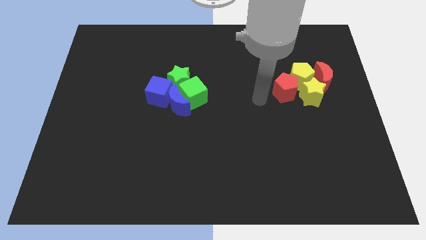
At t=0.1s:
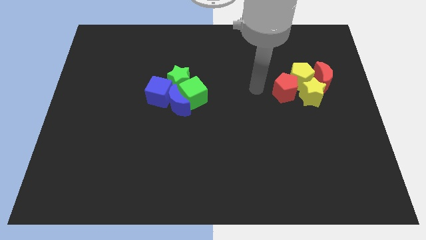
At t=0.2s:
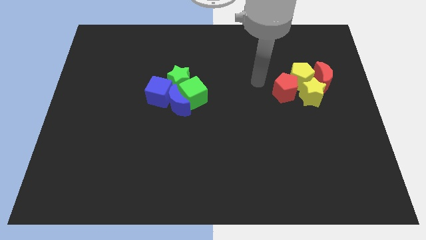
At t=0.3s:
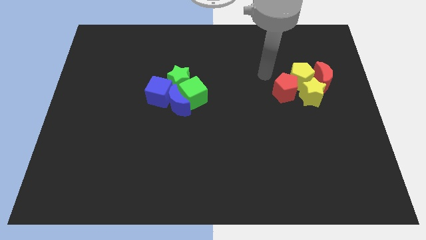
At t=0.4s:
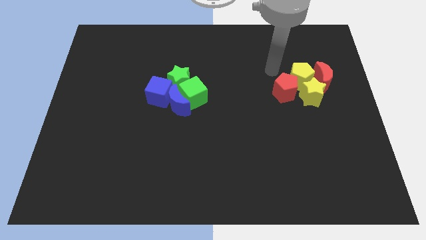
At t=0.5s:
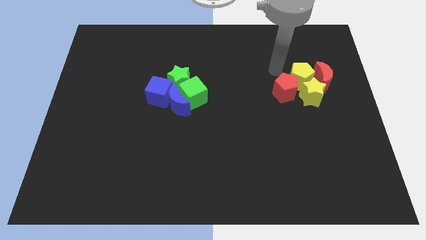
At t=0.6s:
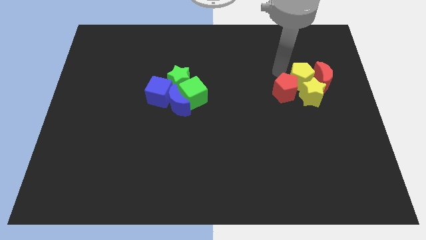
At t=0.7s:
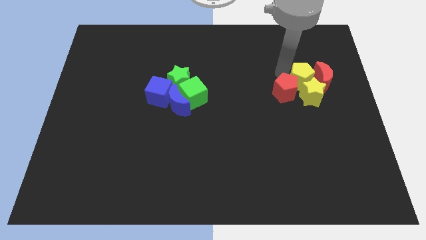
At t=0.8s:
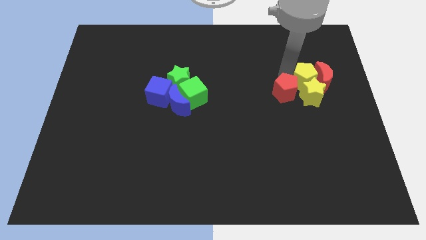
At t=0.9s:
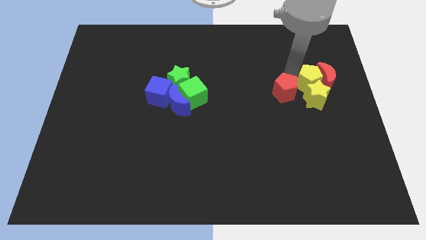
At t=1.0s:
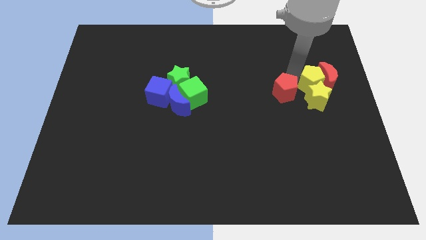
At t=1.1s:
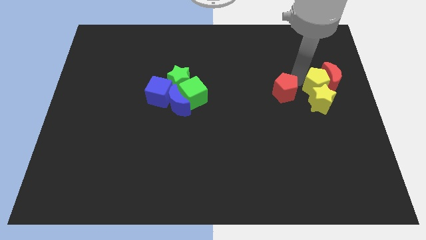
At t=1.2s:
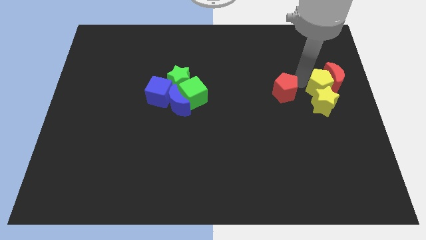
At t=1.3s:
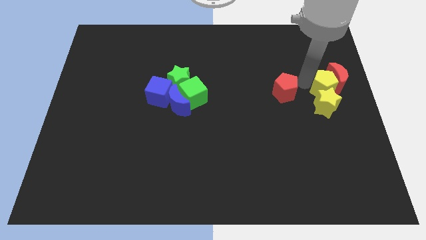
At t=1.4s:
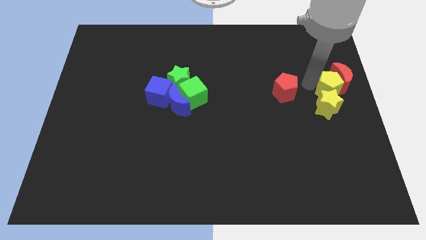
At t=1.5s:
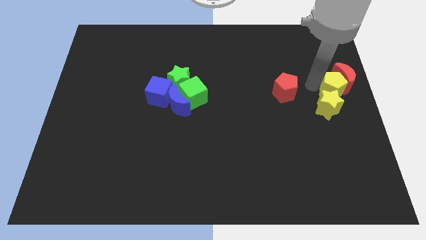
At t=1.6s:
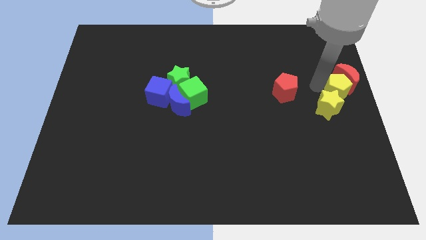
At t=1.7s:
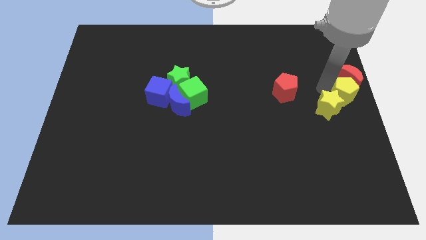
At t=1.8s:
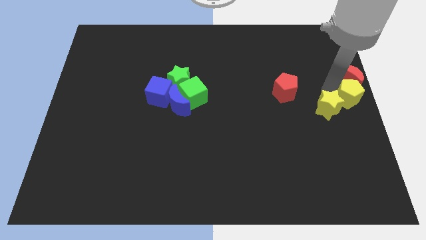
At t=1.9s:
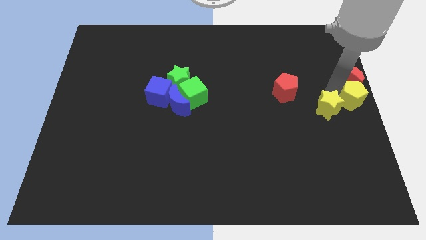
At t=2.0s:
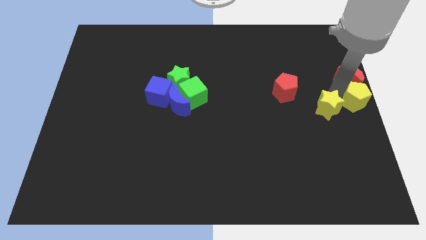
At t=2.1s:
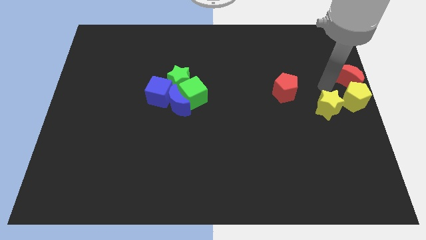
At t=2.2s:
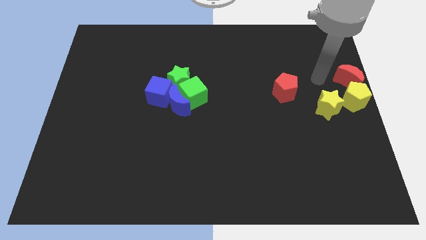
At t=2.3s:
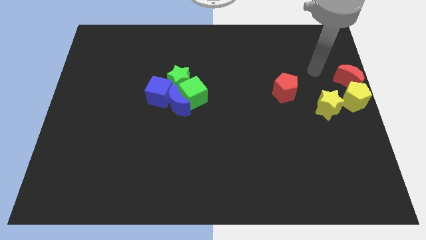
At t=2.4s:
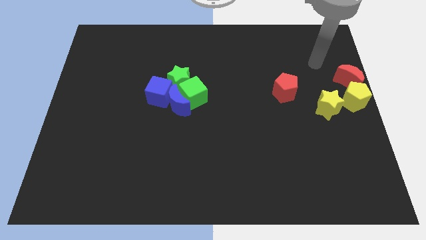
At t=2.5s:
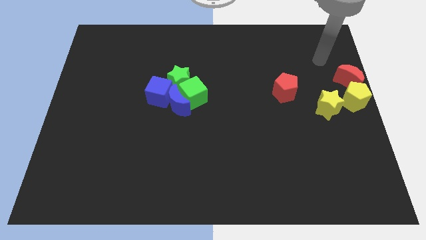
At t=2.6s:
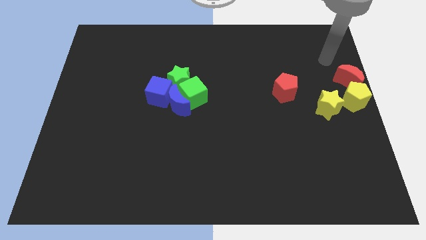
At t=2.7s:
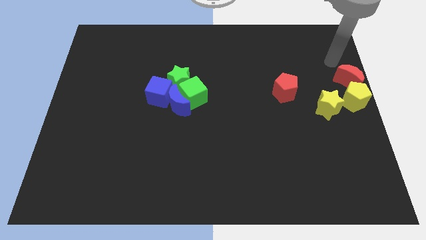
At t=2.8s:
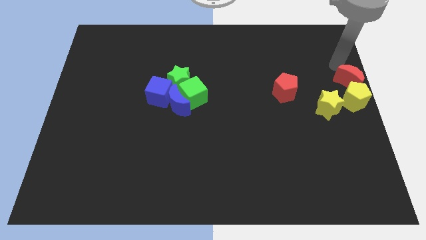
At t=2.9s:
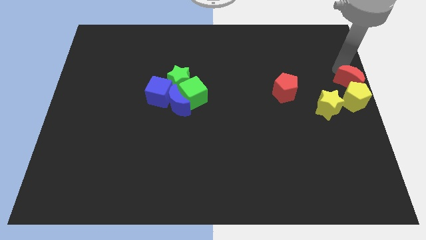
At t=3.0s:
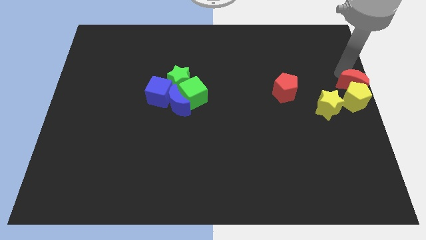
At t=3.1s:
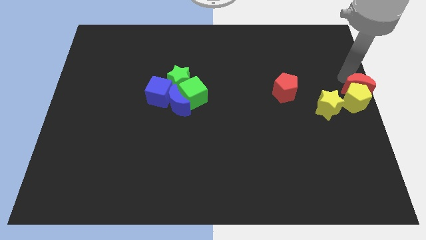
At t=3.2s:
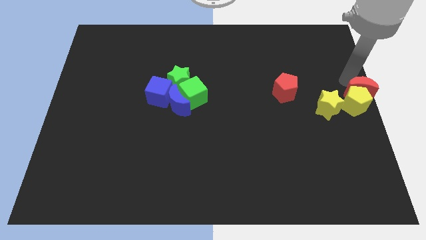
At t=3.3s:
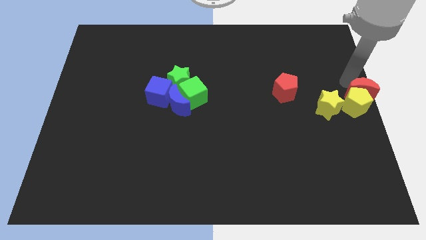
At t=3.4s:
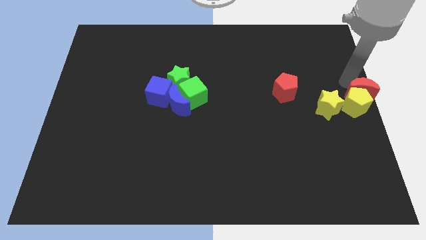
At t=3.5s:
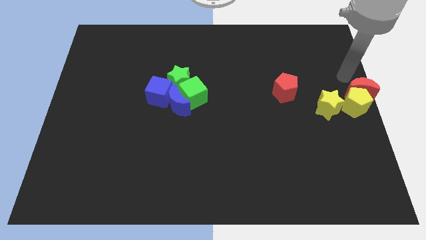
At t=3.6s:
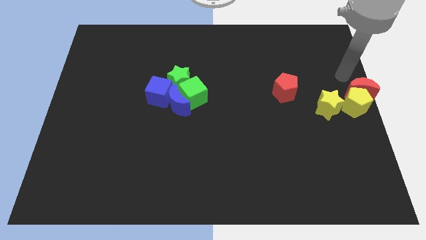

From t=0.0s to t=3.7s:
move the yellow pentagon to the center right of the board

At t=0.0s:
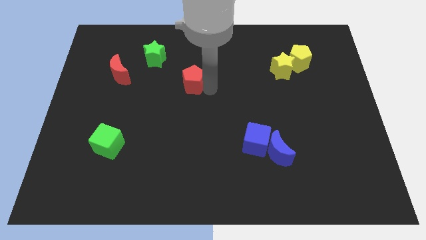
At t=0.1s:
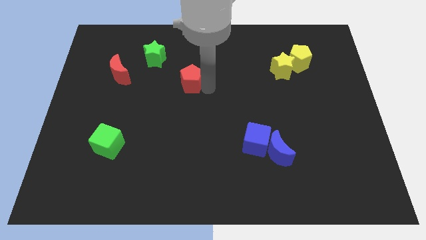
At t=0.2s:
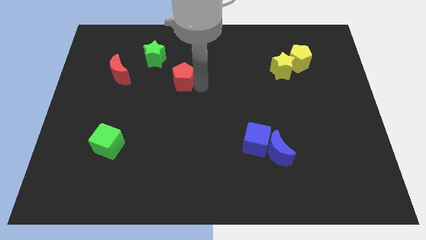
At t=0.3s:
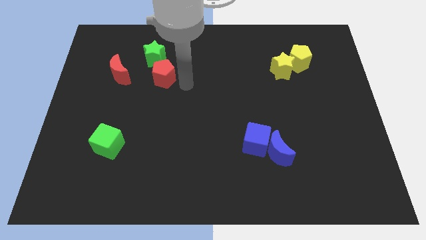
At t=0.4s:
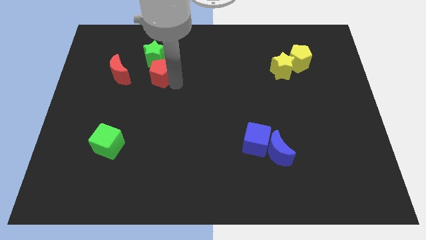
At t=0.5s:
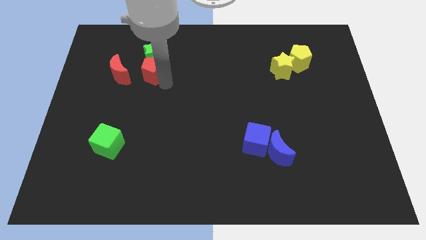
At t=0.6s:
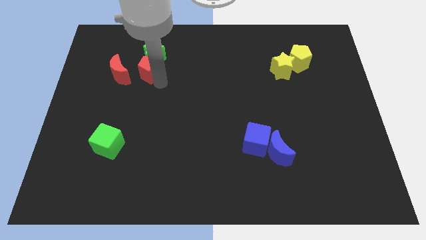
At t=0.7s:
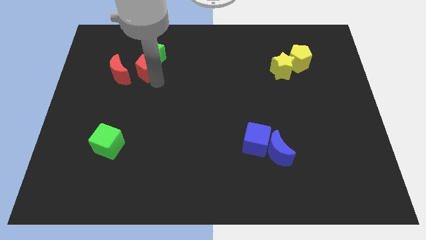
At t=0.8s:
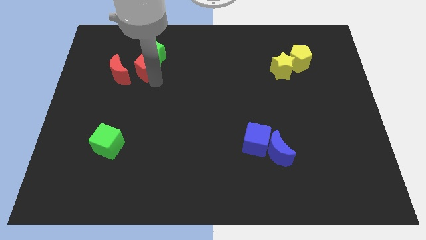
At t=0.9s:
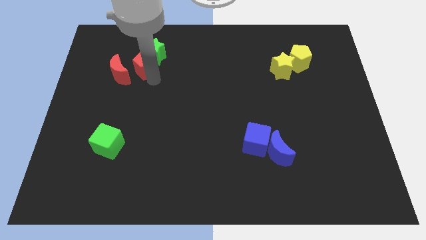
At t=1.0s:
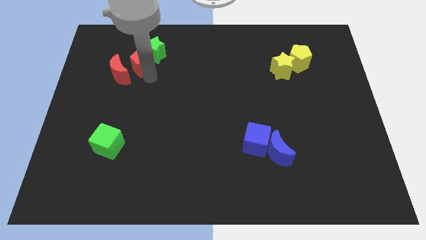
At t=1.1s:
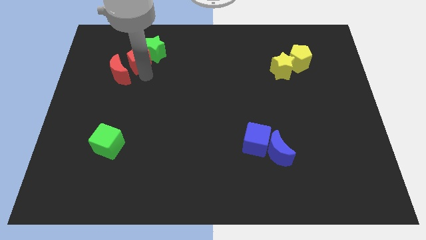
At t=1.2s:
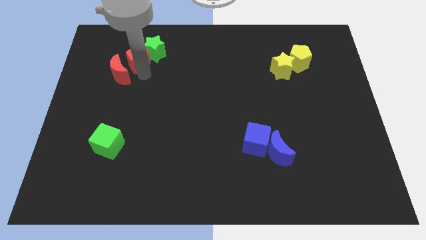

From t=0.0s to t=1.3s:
put red pentagon in between red moon and green star

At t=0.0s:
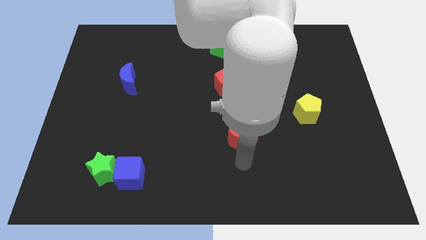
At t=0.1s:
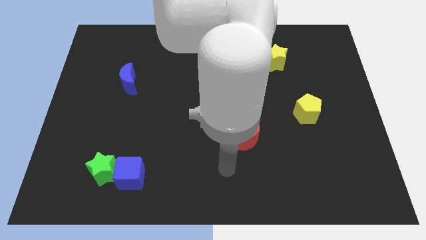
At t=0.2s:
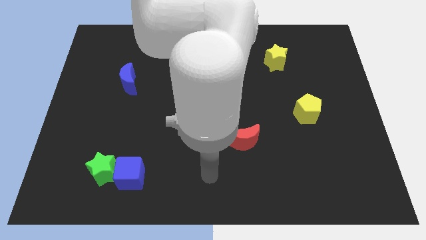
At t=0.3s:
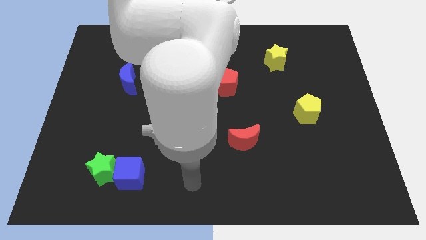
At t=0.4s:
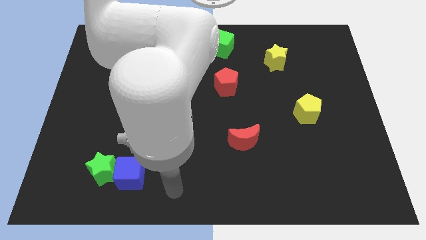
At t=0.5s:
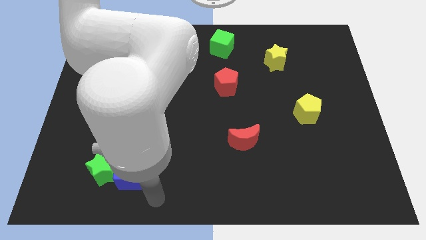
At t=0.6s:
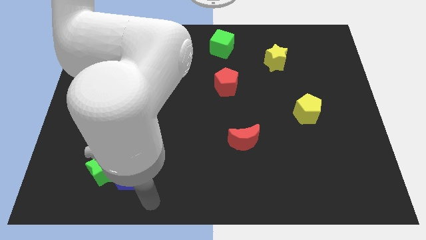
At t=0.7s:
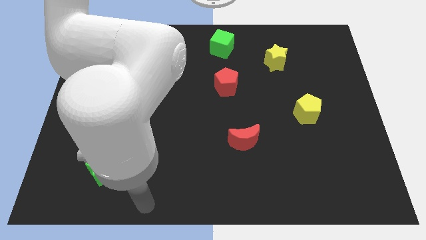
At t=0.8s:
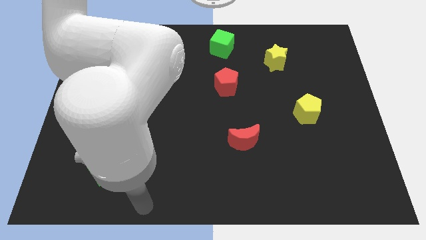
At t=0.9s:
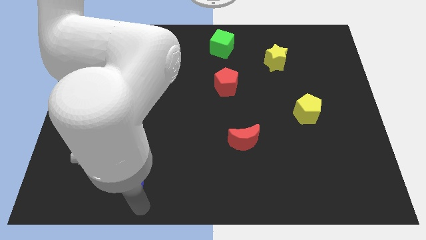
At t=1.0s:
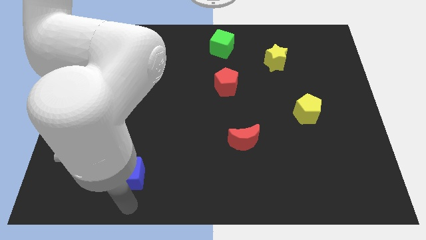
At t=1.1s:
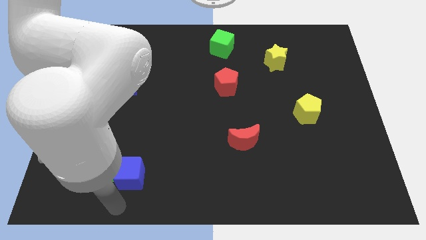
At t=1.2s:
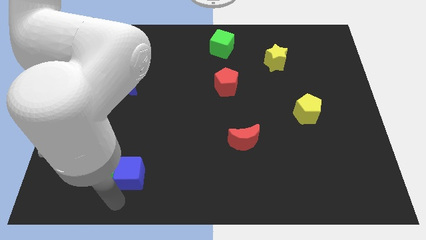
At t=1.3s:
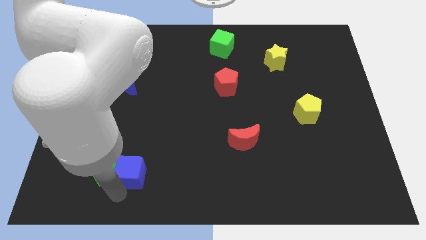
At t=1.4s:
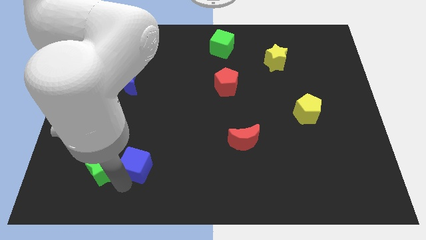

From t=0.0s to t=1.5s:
tap the bottom side of the blue cube

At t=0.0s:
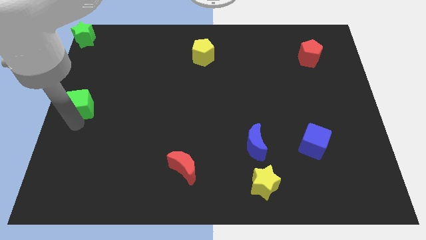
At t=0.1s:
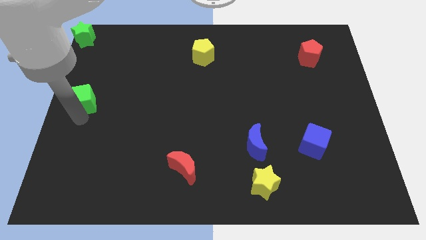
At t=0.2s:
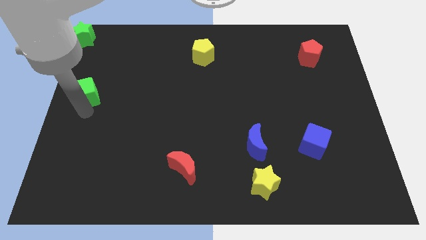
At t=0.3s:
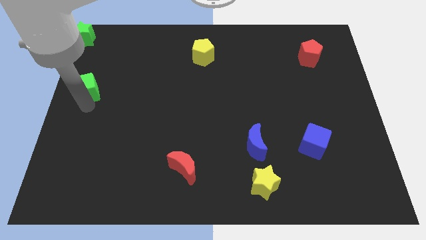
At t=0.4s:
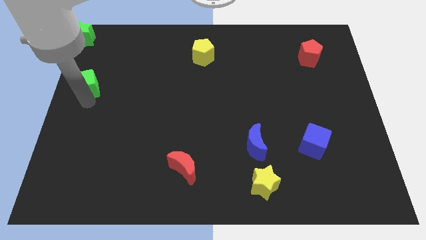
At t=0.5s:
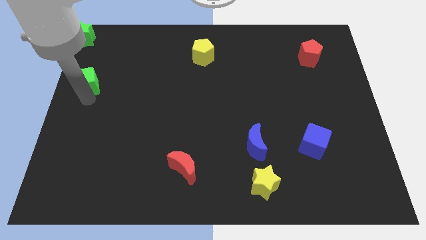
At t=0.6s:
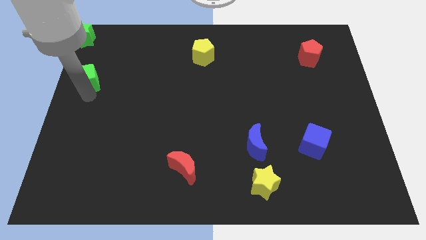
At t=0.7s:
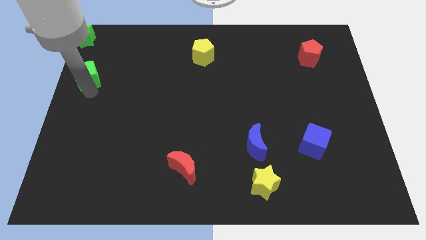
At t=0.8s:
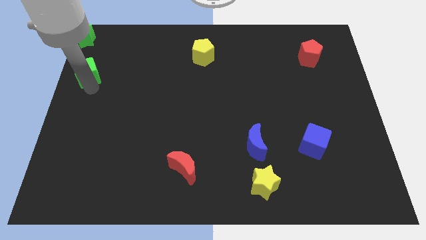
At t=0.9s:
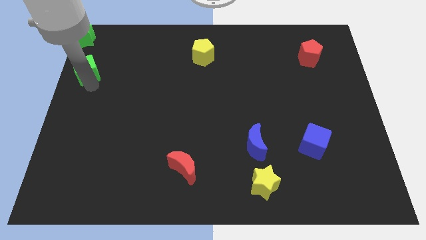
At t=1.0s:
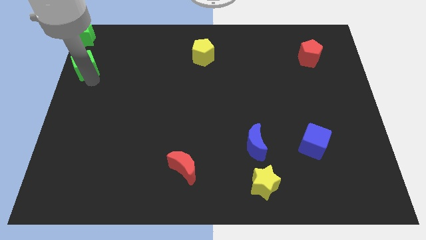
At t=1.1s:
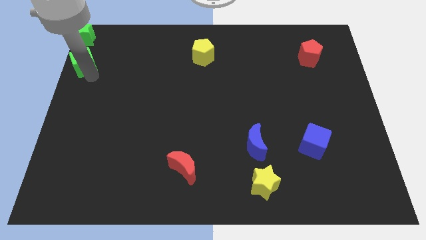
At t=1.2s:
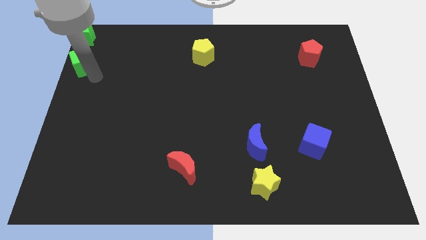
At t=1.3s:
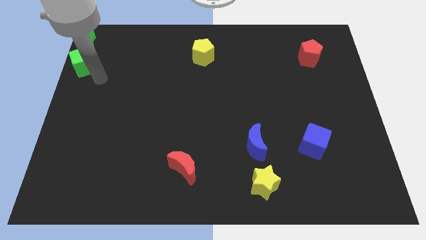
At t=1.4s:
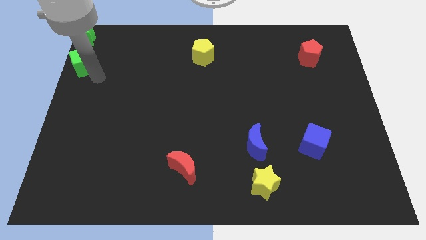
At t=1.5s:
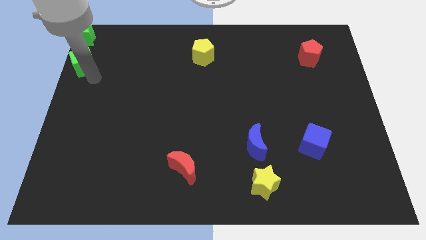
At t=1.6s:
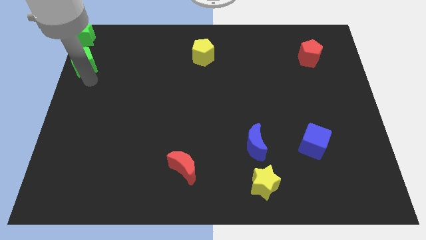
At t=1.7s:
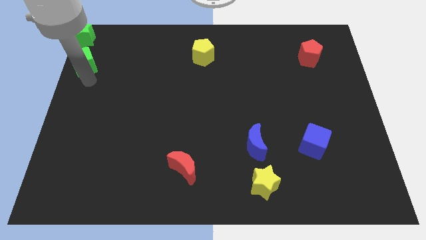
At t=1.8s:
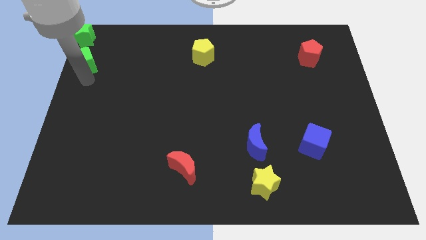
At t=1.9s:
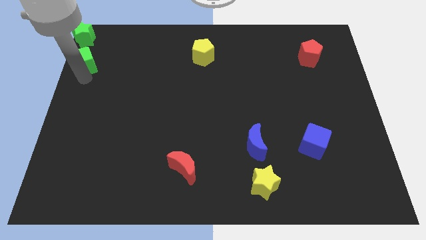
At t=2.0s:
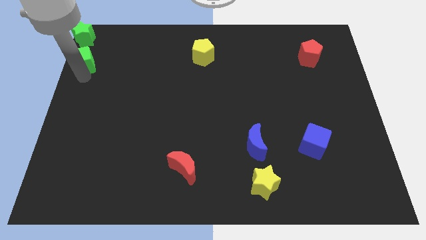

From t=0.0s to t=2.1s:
place the green cube left to the yellow pentagon

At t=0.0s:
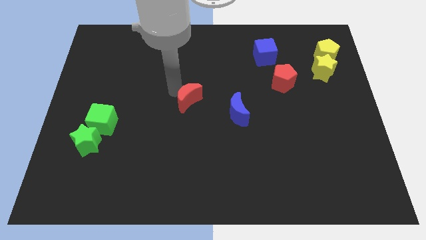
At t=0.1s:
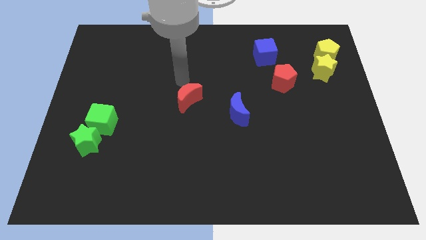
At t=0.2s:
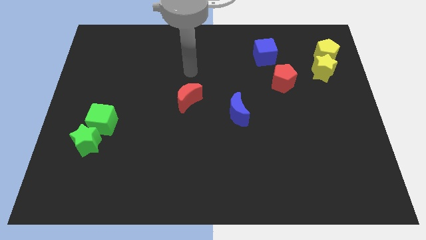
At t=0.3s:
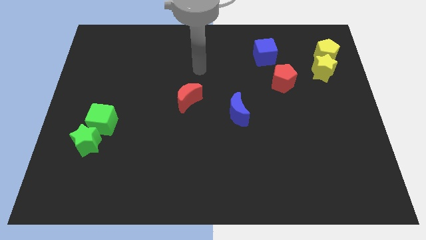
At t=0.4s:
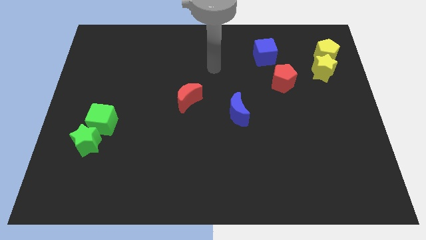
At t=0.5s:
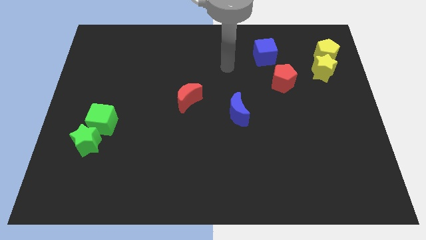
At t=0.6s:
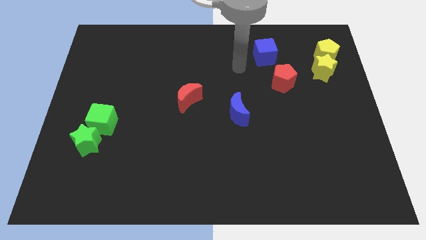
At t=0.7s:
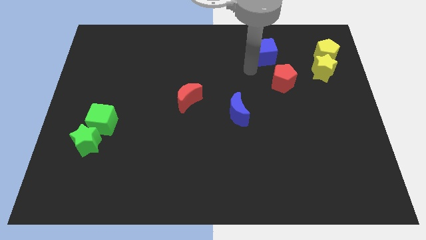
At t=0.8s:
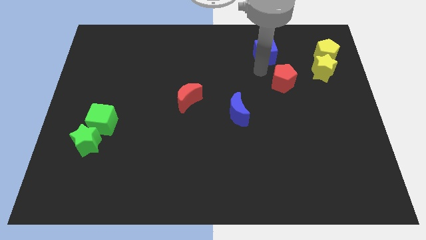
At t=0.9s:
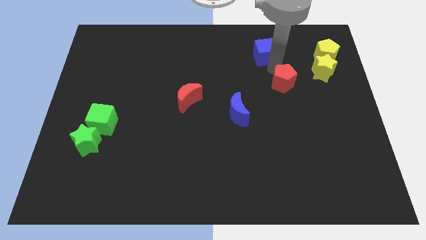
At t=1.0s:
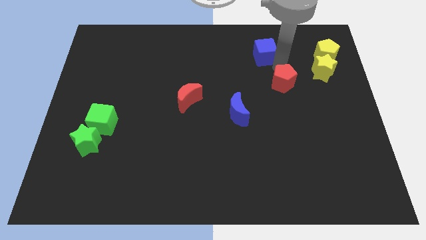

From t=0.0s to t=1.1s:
place the pointer above the red pentagon
